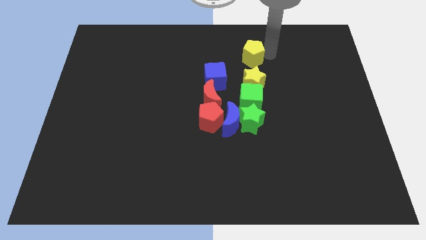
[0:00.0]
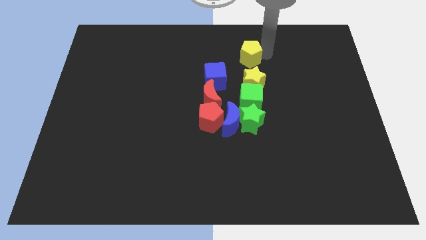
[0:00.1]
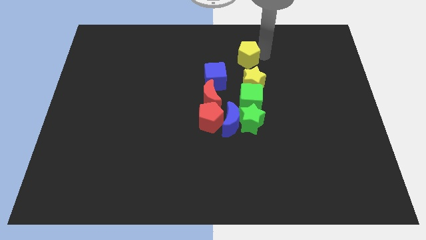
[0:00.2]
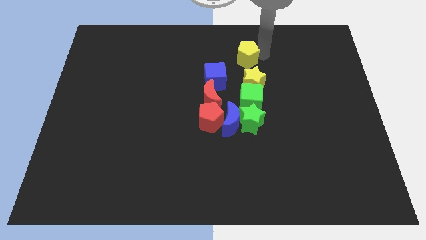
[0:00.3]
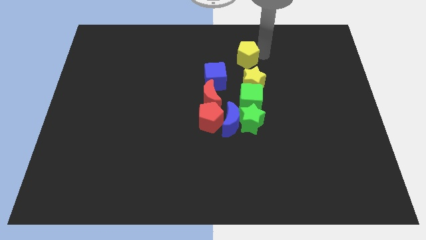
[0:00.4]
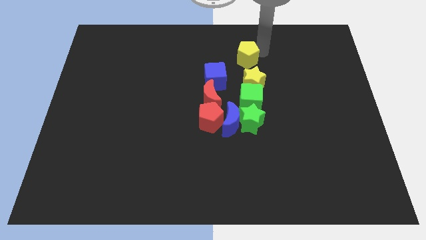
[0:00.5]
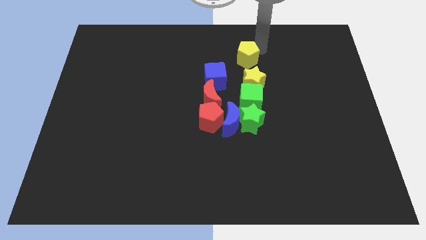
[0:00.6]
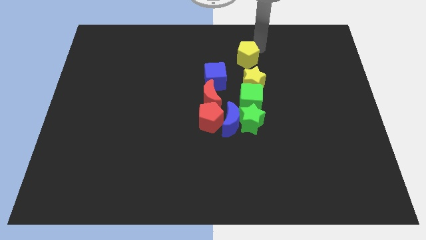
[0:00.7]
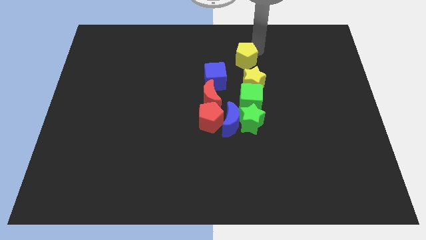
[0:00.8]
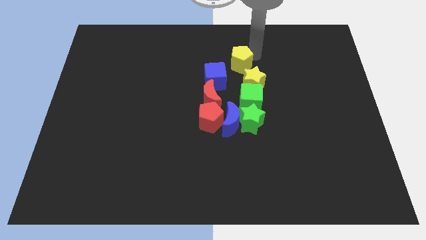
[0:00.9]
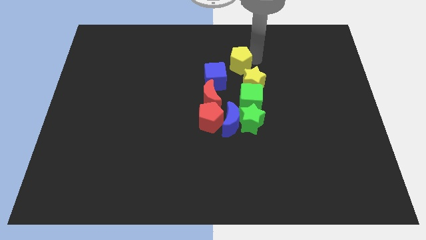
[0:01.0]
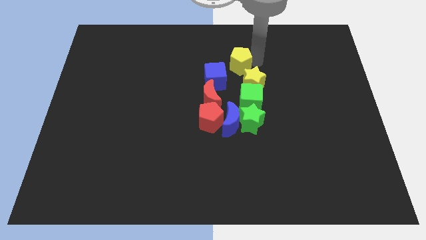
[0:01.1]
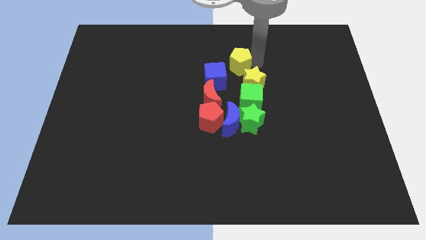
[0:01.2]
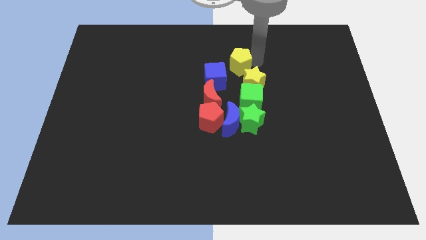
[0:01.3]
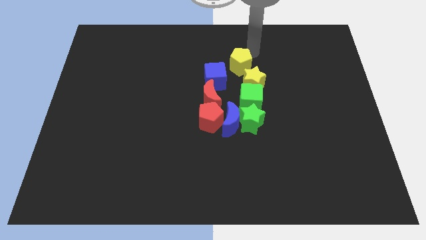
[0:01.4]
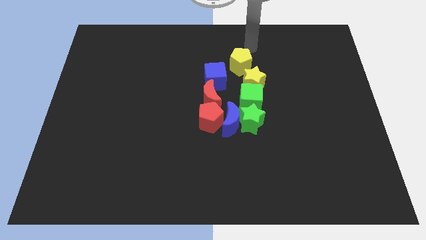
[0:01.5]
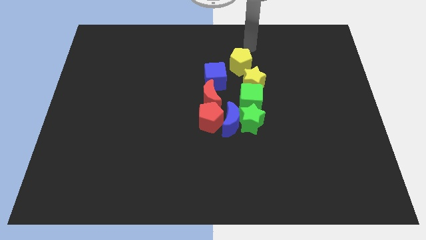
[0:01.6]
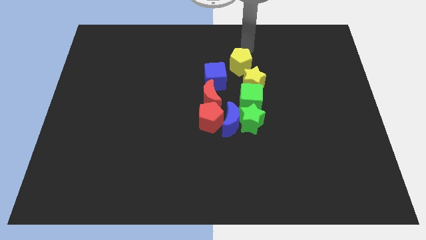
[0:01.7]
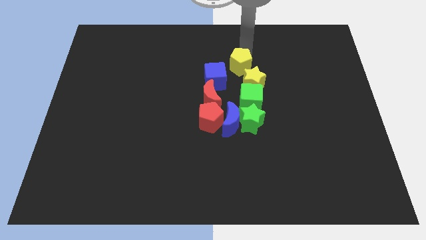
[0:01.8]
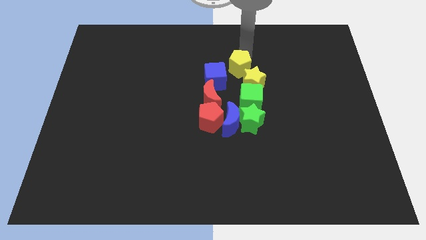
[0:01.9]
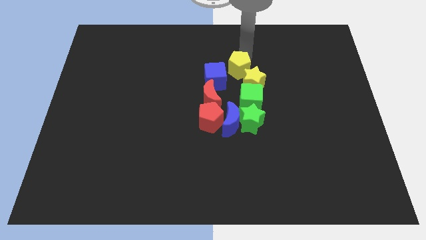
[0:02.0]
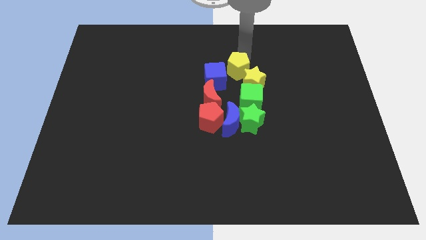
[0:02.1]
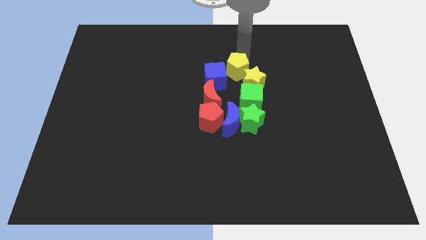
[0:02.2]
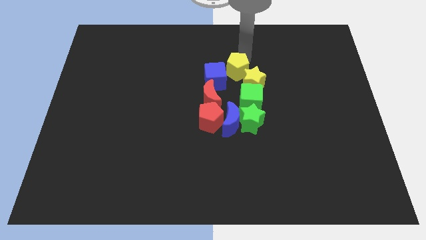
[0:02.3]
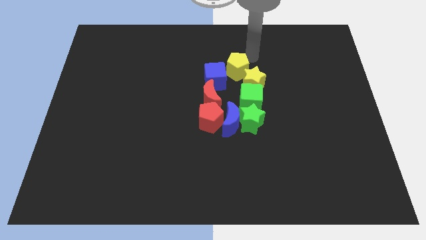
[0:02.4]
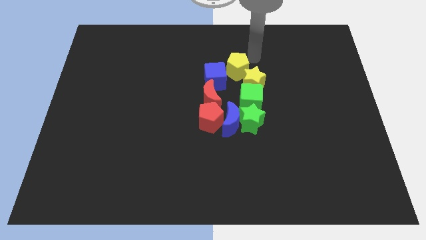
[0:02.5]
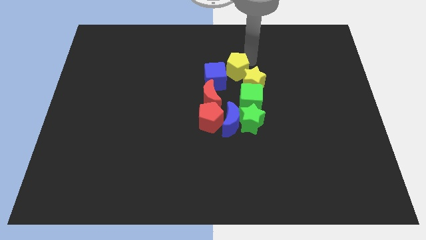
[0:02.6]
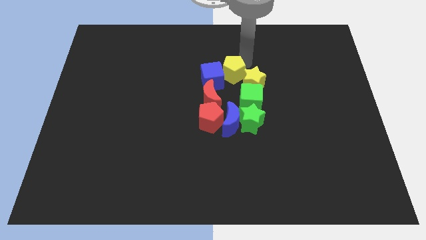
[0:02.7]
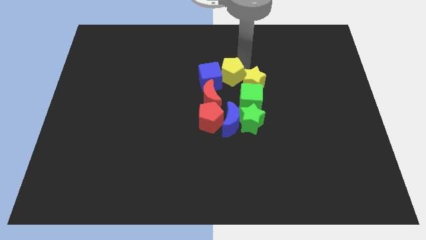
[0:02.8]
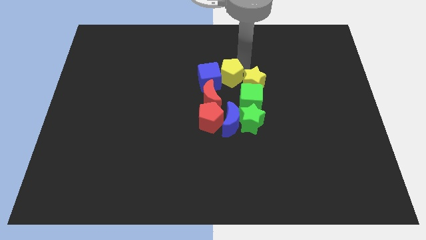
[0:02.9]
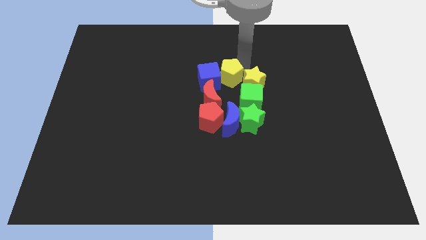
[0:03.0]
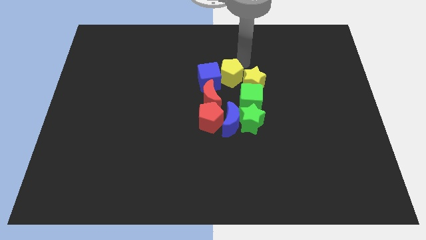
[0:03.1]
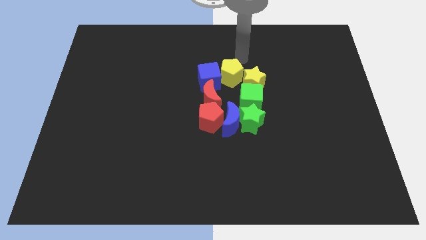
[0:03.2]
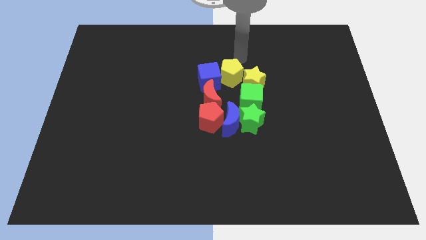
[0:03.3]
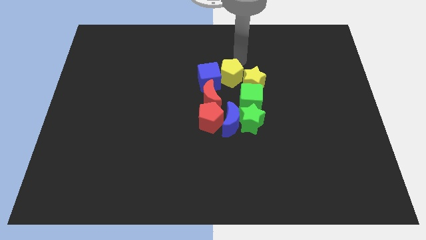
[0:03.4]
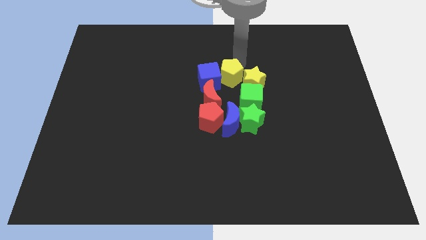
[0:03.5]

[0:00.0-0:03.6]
place the yellow pentagon left to the yellow star

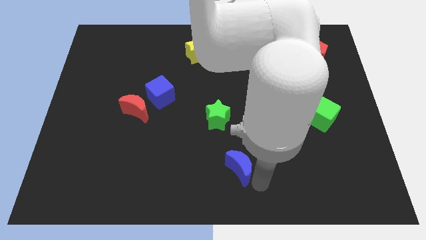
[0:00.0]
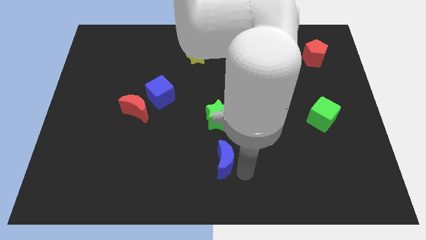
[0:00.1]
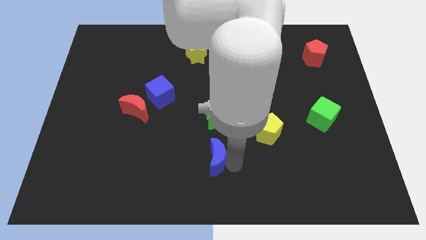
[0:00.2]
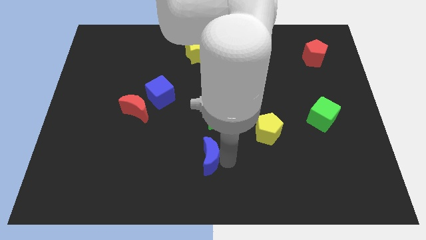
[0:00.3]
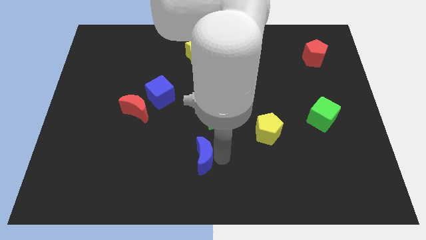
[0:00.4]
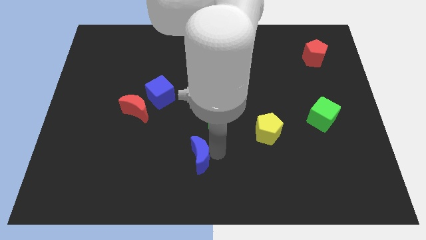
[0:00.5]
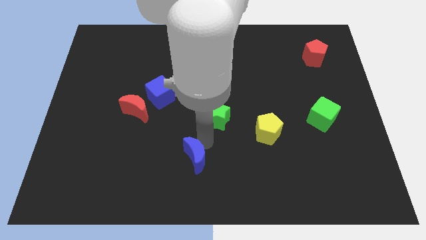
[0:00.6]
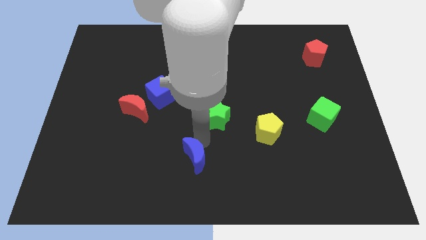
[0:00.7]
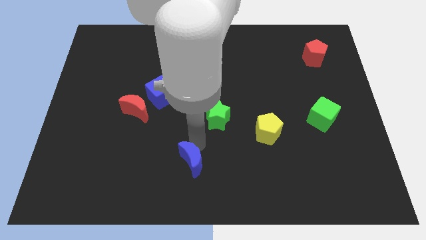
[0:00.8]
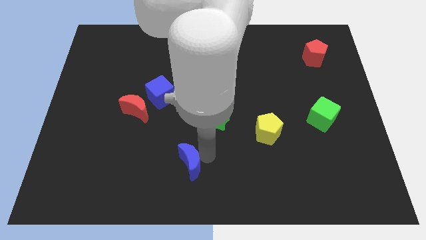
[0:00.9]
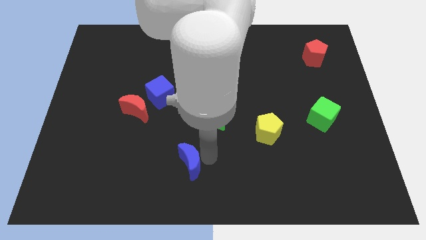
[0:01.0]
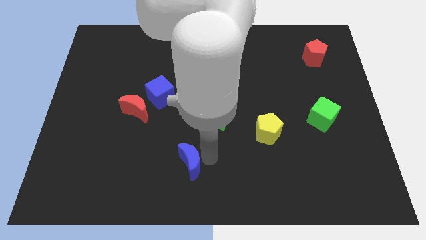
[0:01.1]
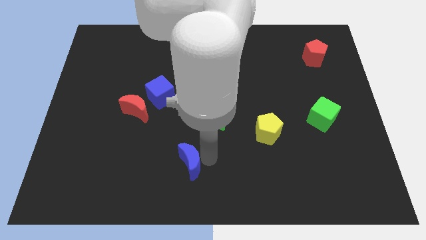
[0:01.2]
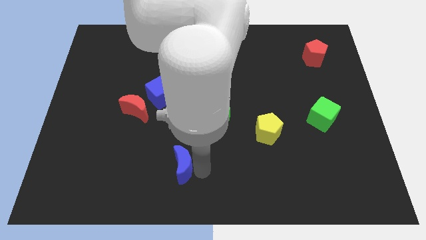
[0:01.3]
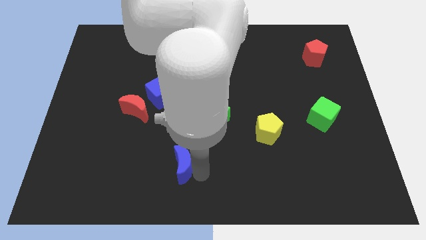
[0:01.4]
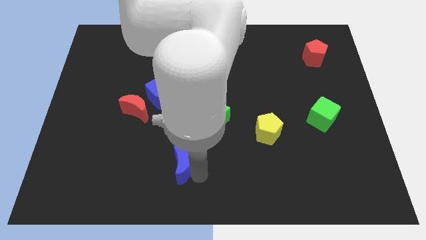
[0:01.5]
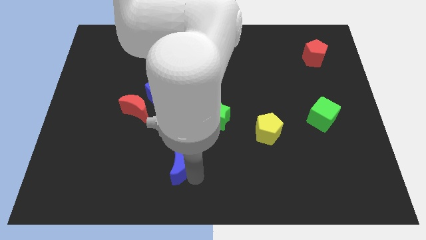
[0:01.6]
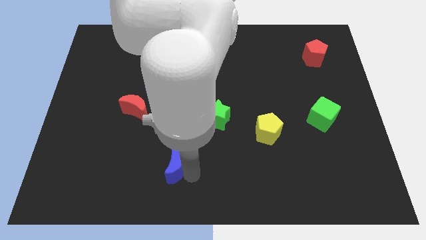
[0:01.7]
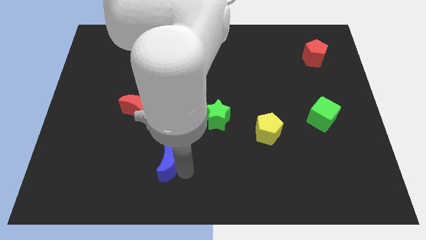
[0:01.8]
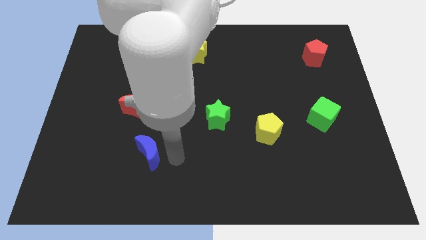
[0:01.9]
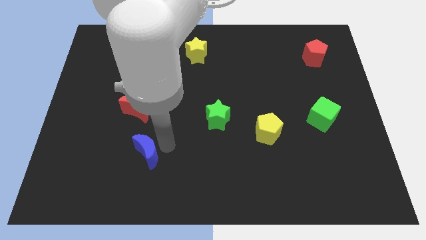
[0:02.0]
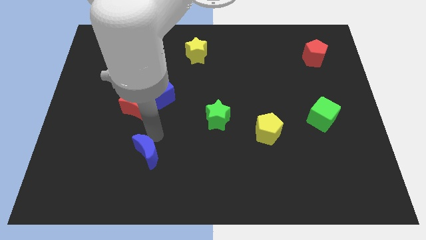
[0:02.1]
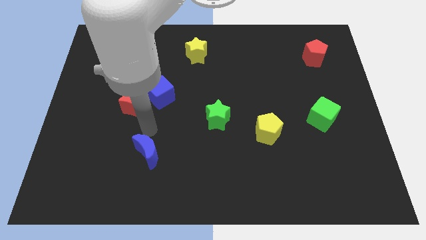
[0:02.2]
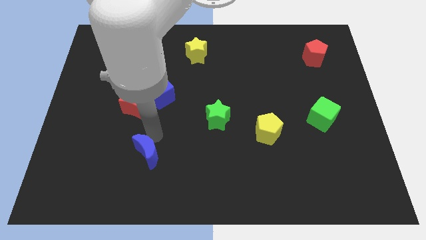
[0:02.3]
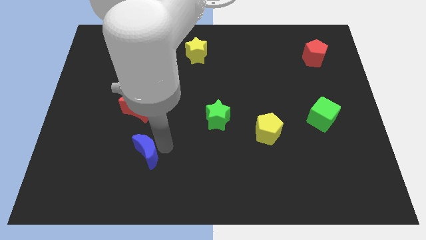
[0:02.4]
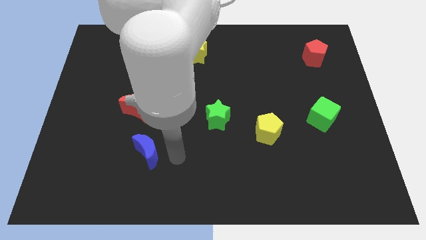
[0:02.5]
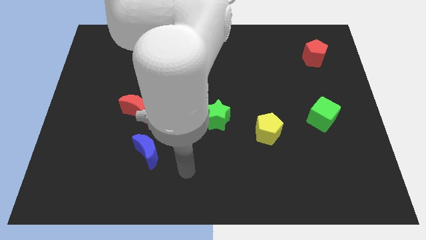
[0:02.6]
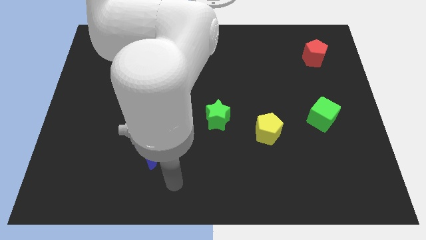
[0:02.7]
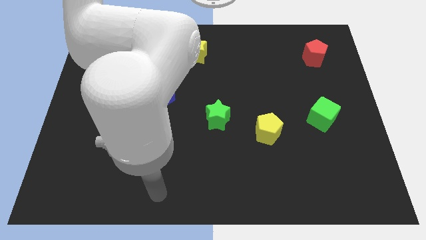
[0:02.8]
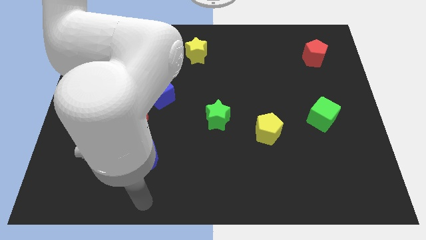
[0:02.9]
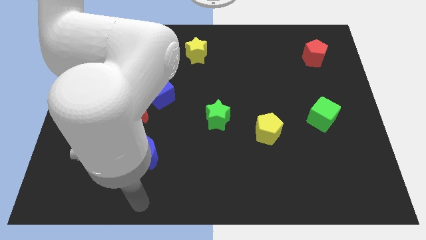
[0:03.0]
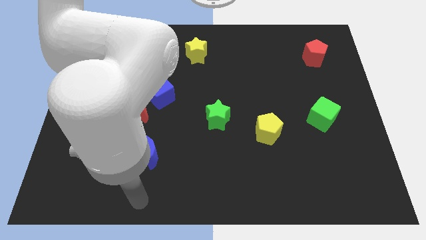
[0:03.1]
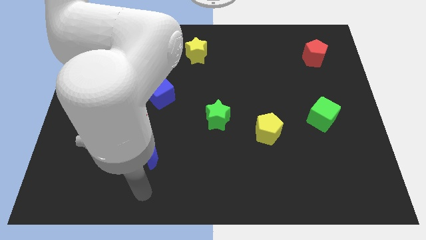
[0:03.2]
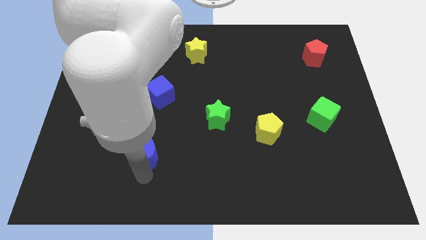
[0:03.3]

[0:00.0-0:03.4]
place blue crescent to the bottom right of red crescent

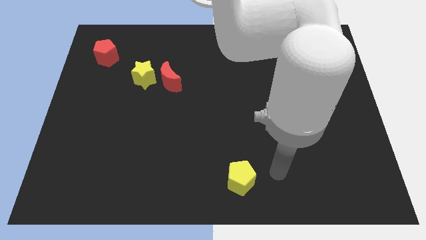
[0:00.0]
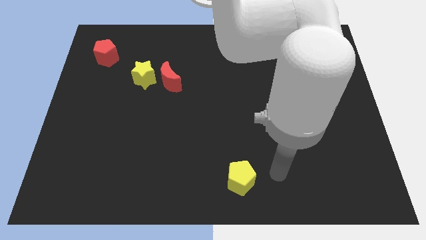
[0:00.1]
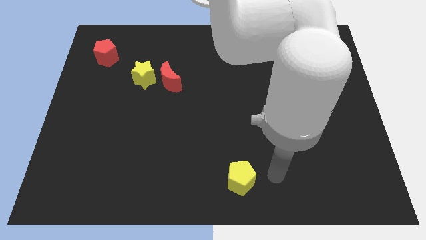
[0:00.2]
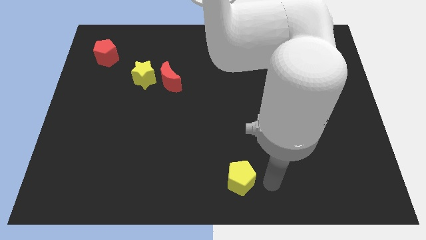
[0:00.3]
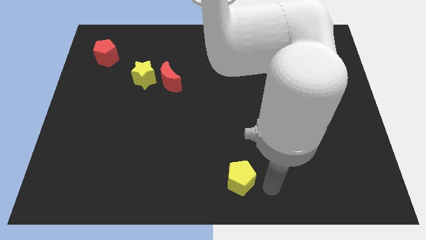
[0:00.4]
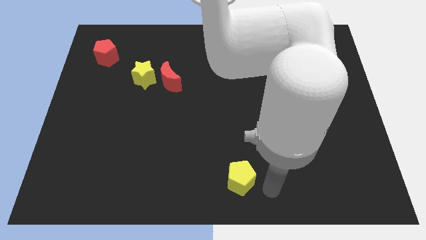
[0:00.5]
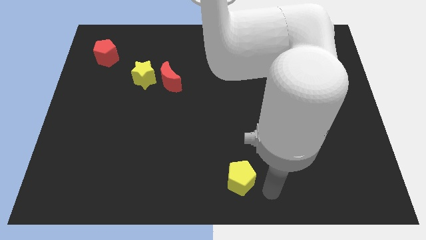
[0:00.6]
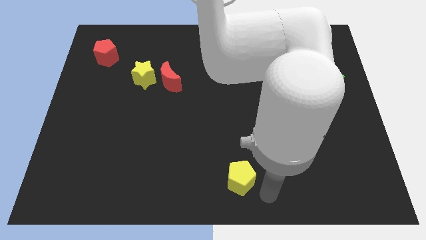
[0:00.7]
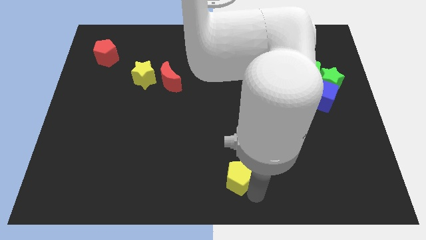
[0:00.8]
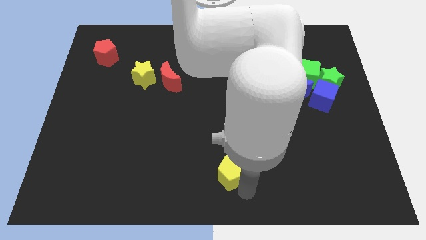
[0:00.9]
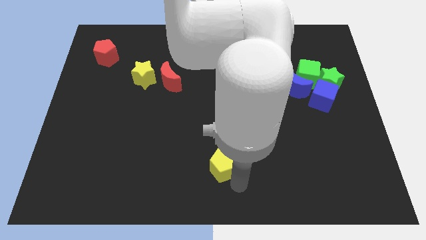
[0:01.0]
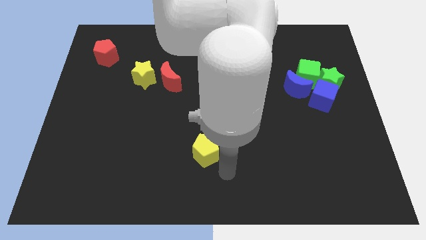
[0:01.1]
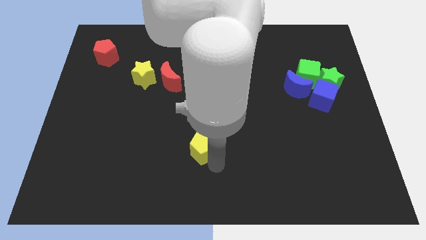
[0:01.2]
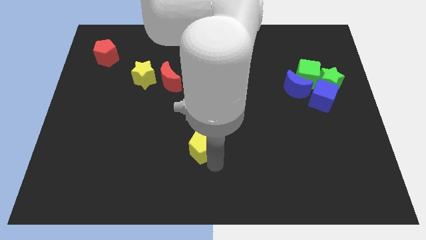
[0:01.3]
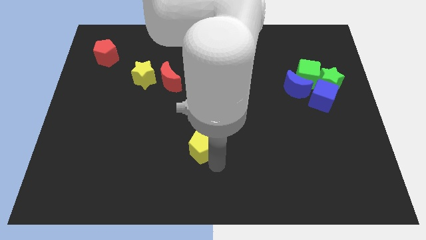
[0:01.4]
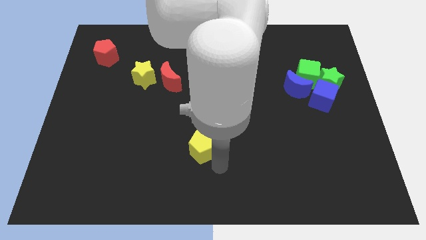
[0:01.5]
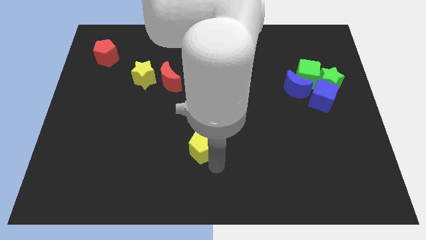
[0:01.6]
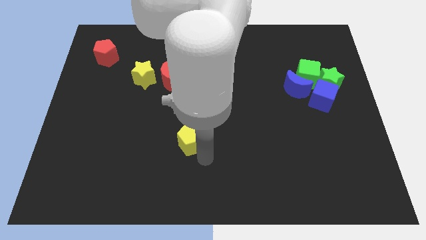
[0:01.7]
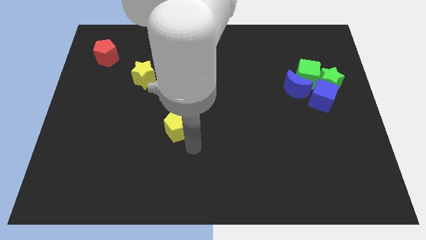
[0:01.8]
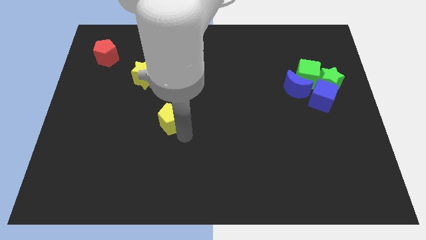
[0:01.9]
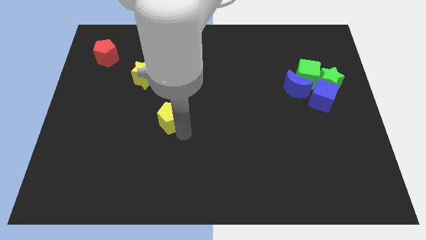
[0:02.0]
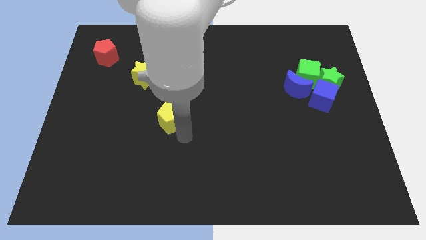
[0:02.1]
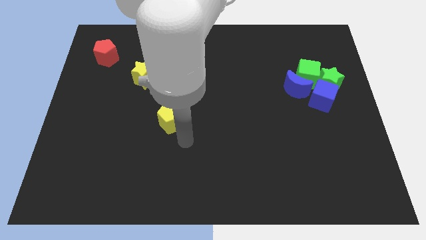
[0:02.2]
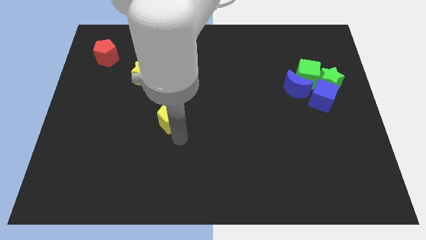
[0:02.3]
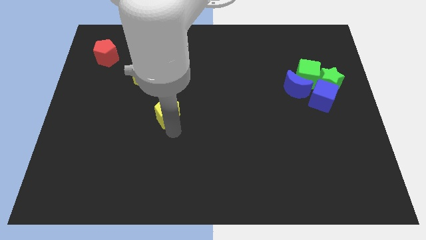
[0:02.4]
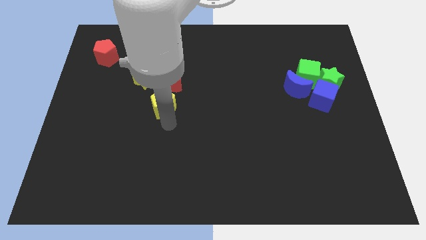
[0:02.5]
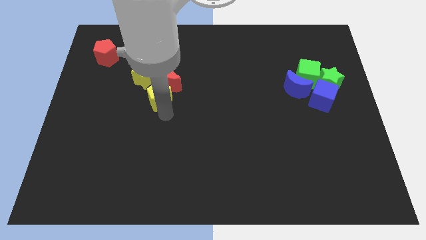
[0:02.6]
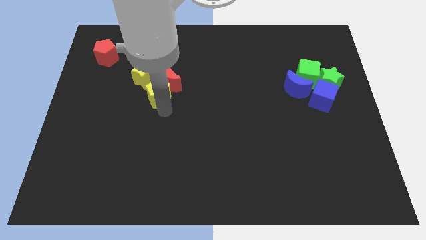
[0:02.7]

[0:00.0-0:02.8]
slide the yellow pentagon towards the yellow star
